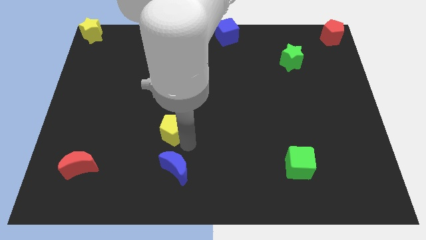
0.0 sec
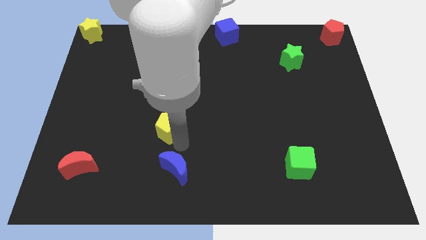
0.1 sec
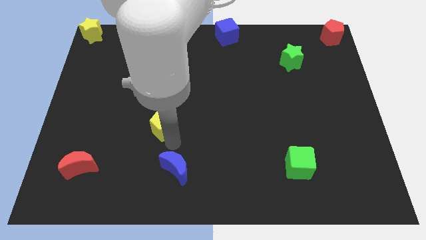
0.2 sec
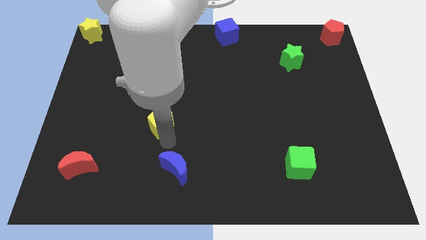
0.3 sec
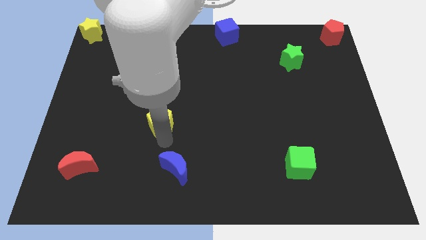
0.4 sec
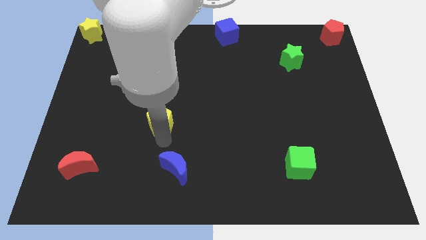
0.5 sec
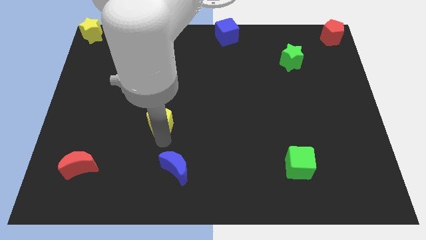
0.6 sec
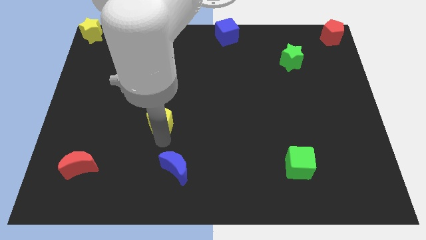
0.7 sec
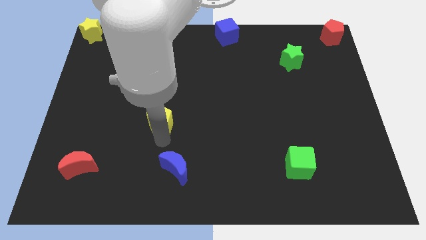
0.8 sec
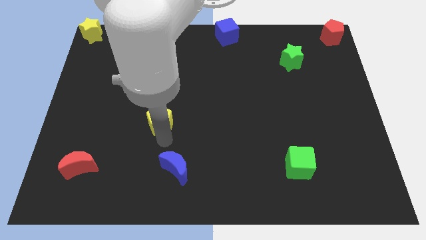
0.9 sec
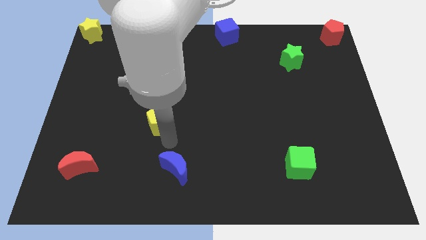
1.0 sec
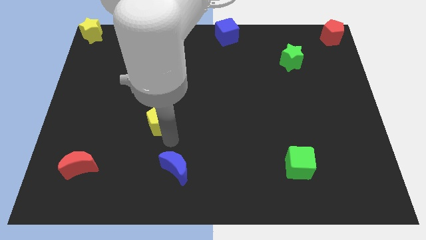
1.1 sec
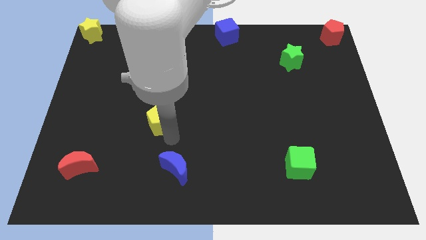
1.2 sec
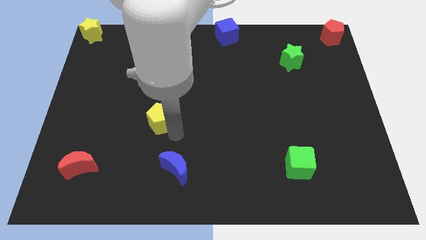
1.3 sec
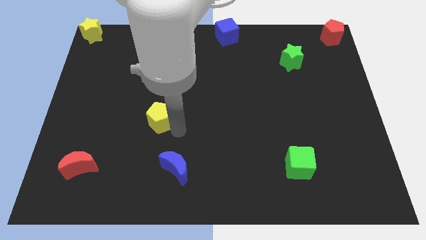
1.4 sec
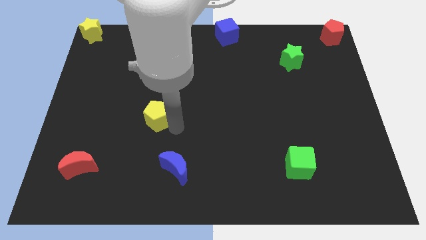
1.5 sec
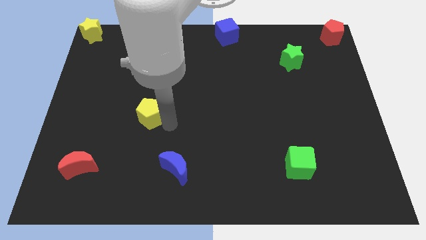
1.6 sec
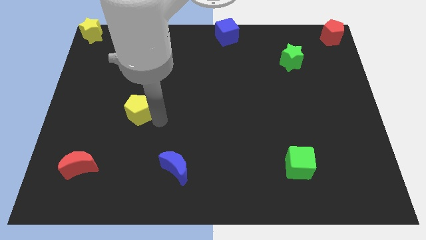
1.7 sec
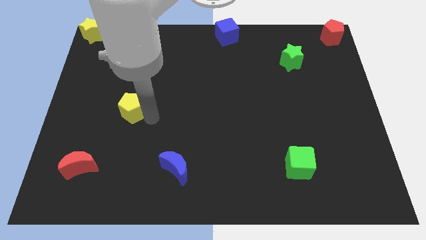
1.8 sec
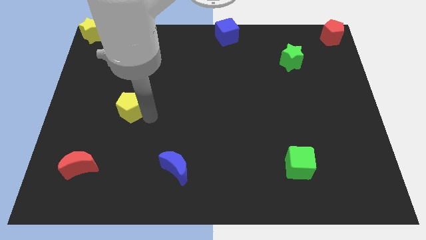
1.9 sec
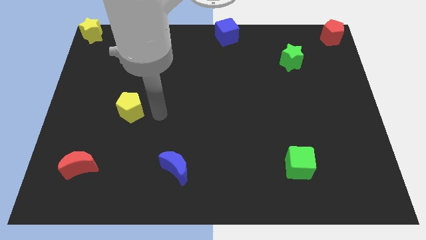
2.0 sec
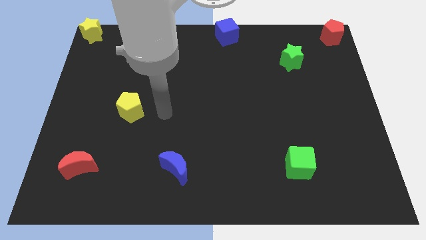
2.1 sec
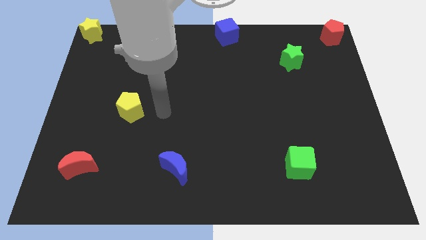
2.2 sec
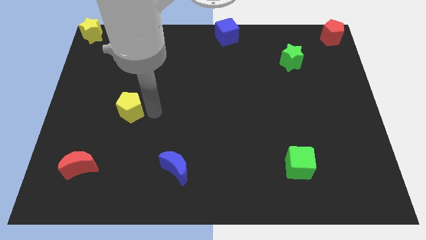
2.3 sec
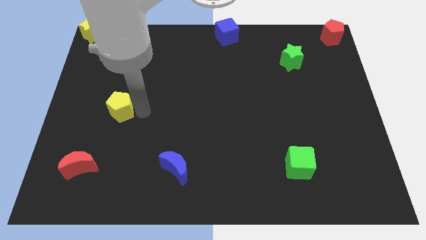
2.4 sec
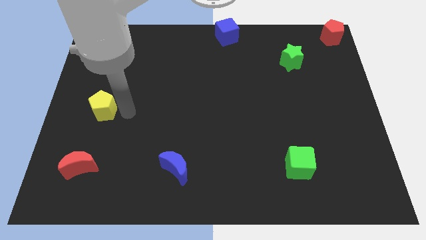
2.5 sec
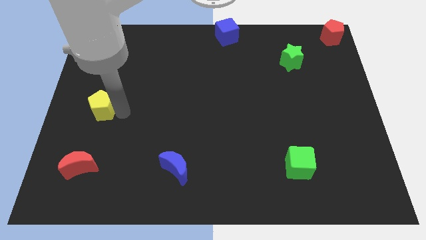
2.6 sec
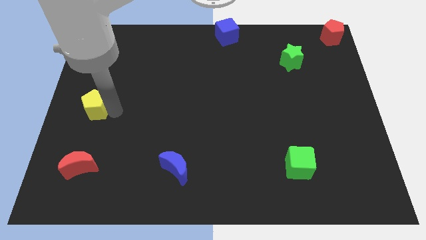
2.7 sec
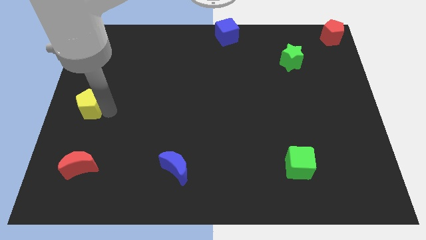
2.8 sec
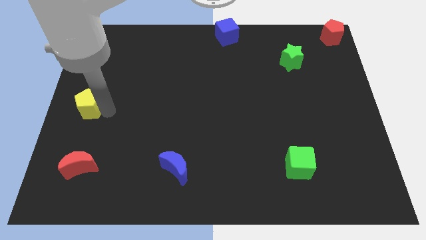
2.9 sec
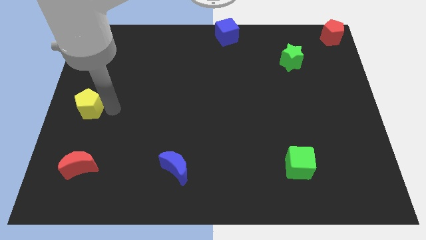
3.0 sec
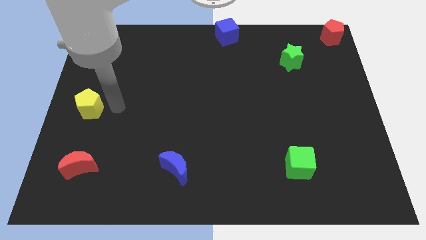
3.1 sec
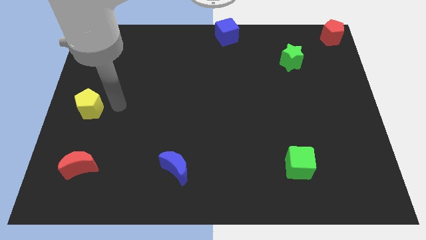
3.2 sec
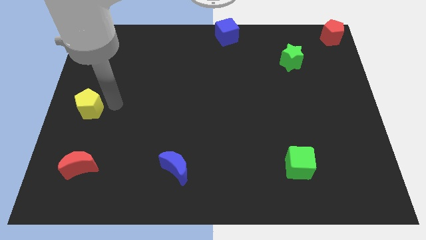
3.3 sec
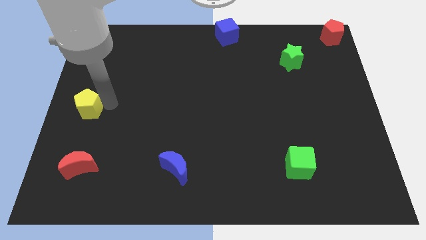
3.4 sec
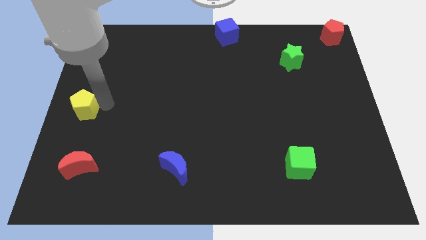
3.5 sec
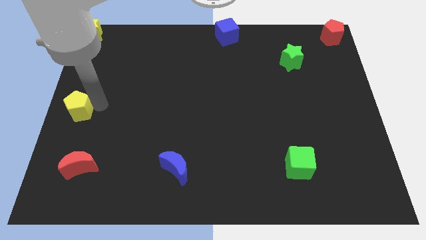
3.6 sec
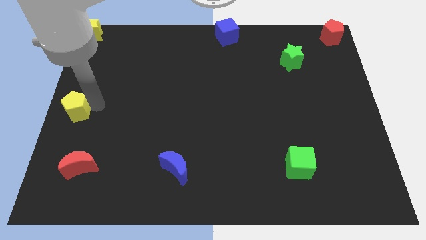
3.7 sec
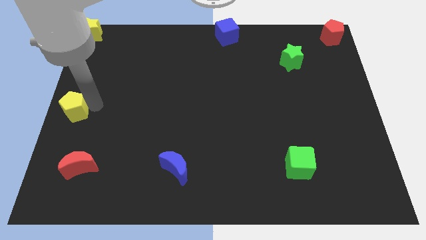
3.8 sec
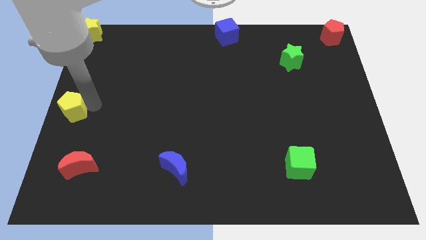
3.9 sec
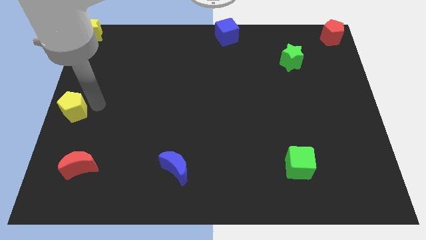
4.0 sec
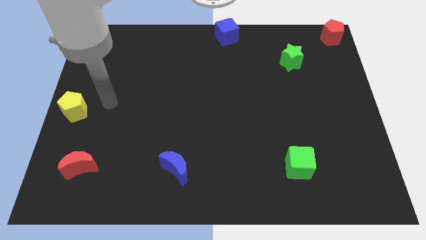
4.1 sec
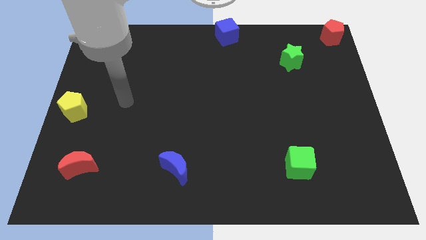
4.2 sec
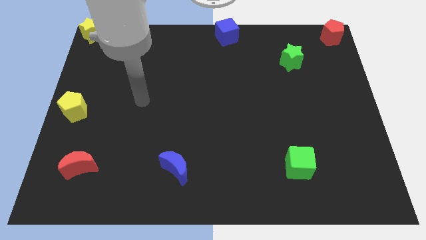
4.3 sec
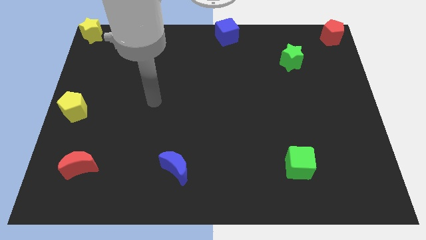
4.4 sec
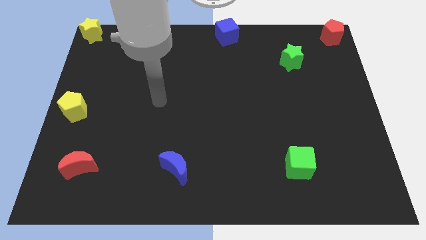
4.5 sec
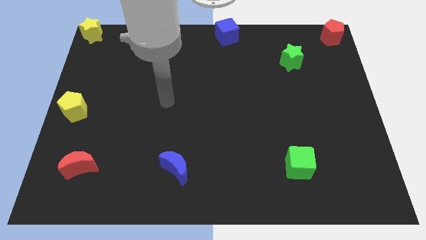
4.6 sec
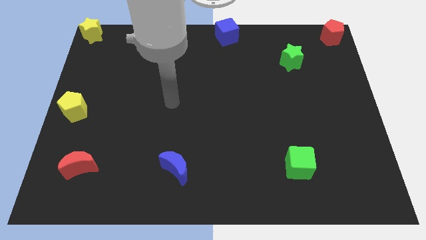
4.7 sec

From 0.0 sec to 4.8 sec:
slide yellow pentagon to the center left of the board

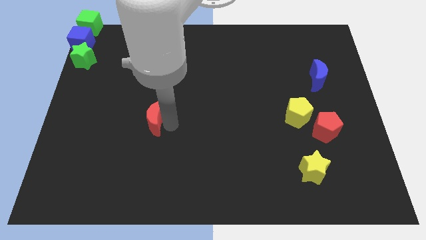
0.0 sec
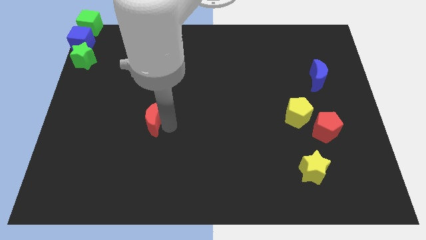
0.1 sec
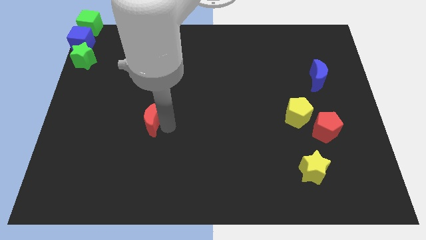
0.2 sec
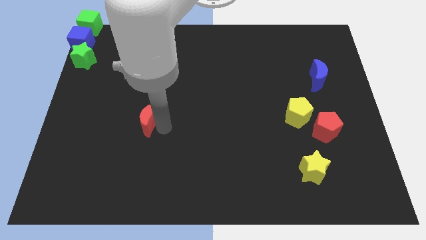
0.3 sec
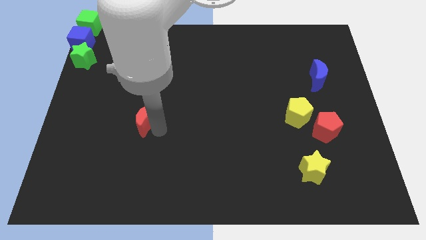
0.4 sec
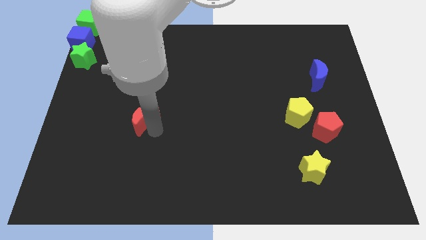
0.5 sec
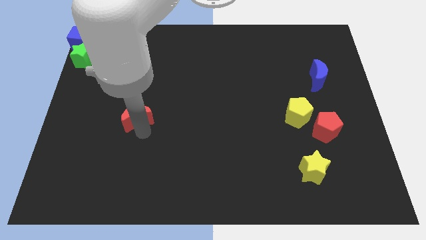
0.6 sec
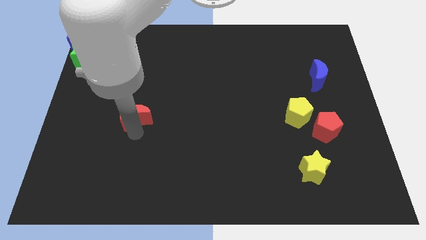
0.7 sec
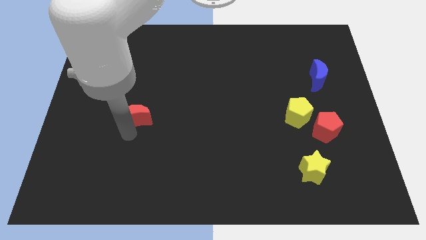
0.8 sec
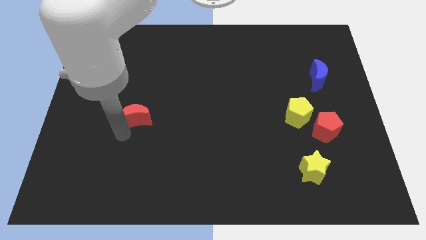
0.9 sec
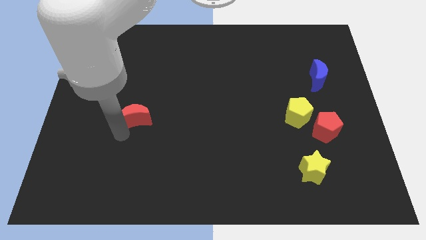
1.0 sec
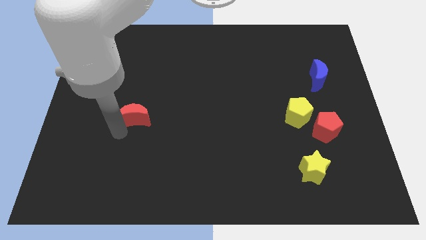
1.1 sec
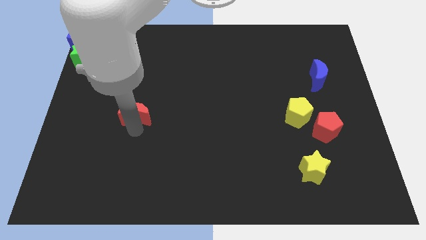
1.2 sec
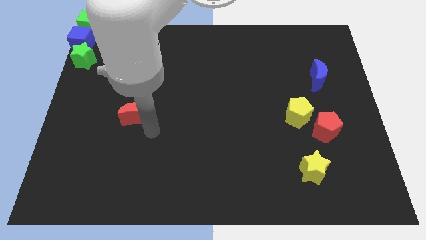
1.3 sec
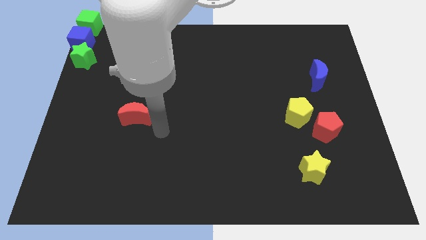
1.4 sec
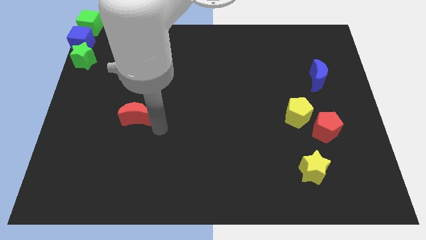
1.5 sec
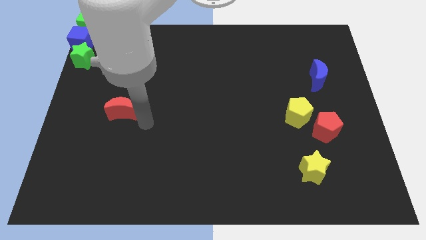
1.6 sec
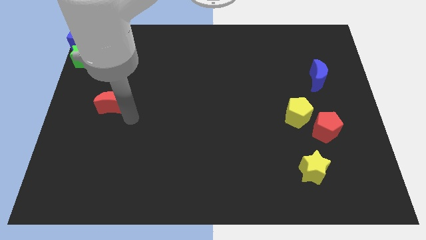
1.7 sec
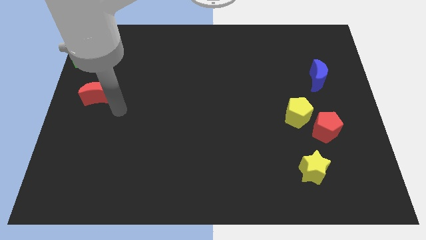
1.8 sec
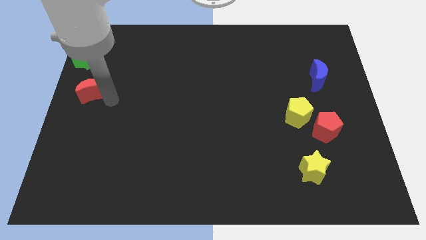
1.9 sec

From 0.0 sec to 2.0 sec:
move the red moon to the bottom of the green star

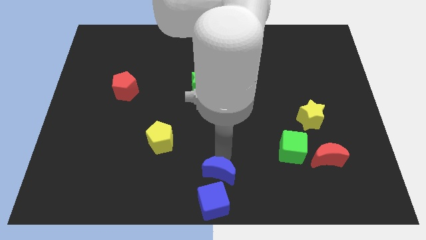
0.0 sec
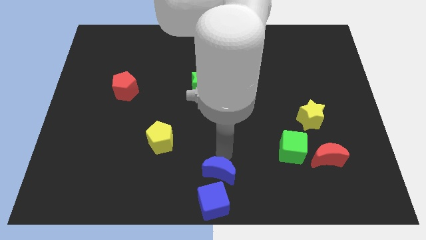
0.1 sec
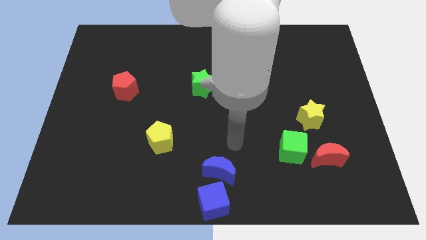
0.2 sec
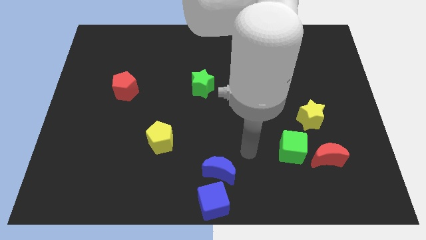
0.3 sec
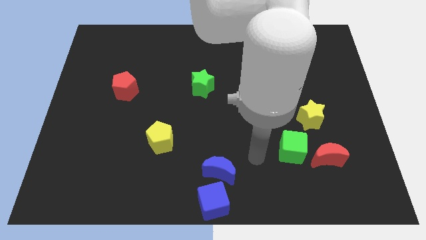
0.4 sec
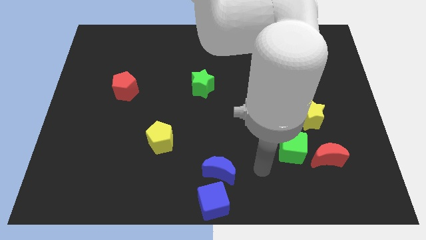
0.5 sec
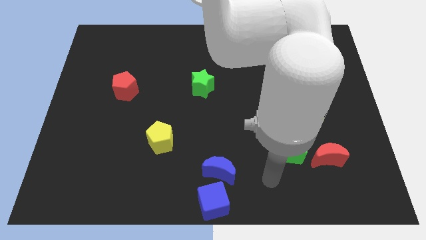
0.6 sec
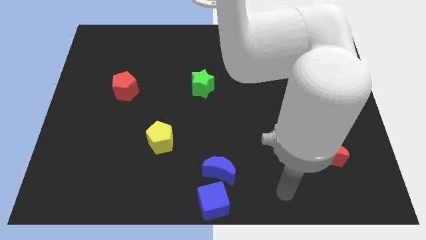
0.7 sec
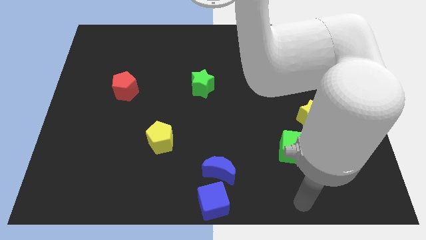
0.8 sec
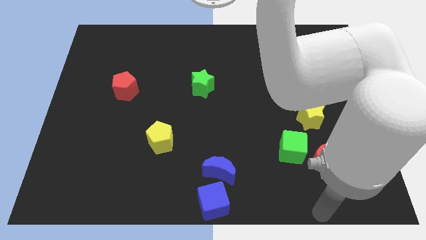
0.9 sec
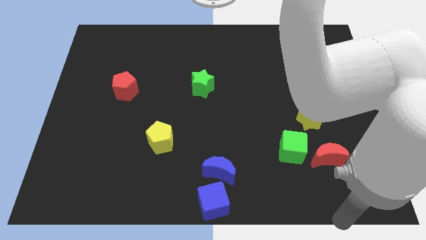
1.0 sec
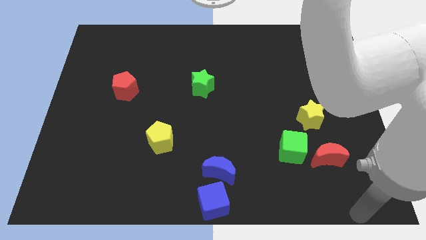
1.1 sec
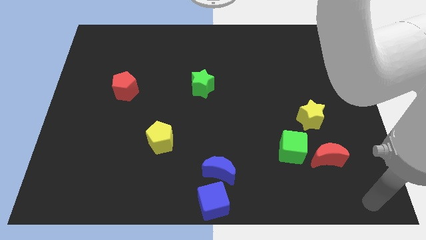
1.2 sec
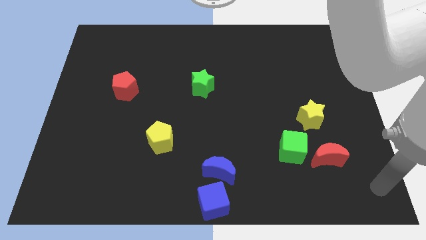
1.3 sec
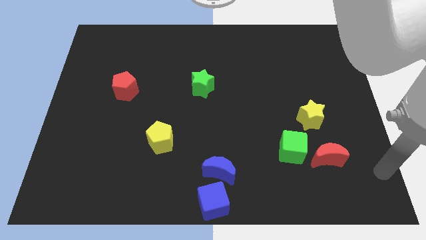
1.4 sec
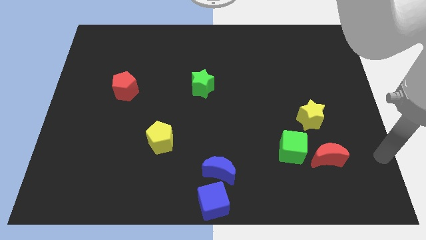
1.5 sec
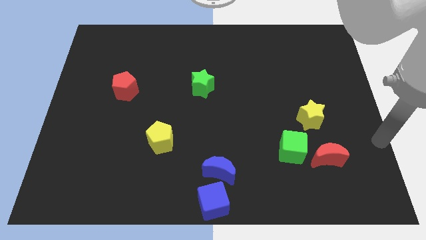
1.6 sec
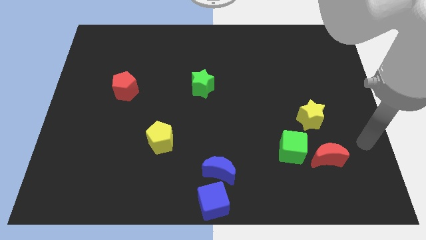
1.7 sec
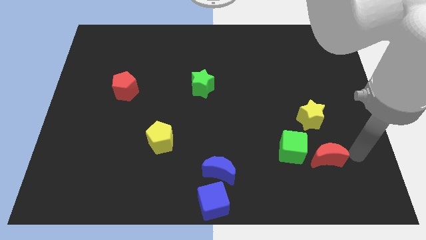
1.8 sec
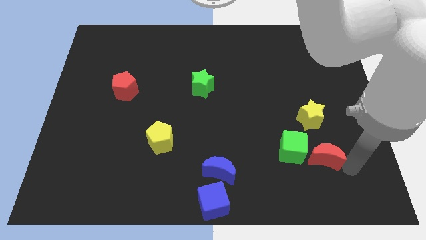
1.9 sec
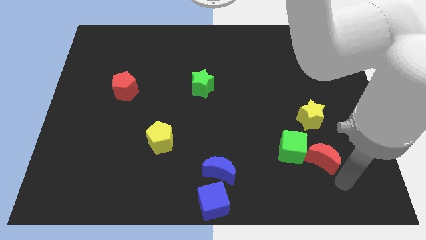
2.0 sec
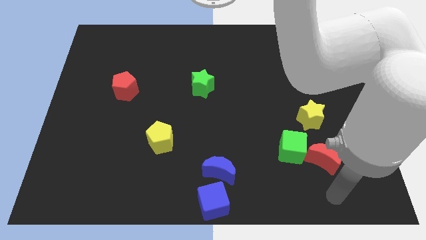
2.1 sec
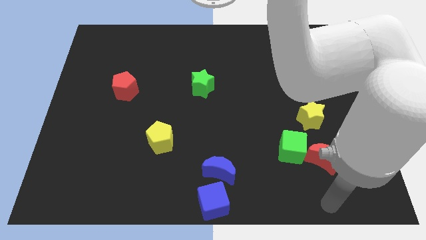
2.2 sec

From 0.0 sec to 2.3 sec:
place the red crescent to the bottom of green cube
